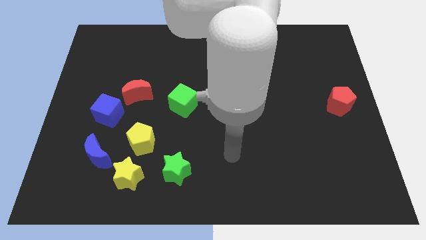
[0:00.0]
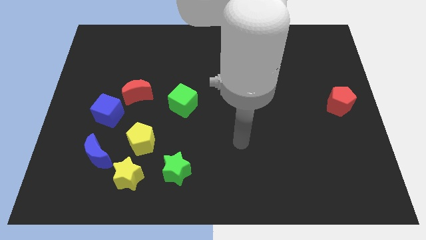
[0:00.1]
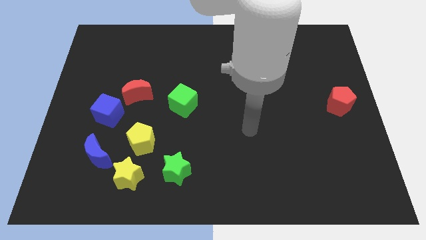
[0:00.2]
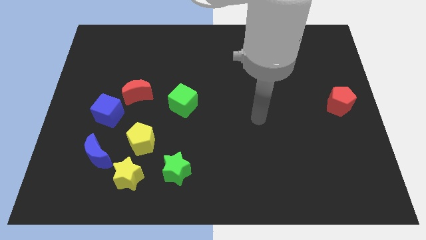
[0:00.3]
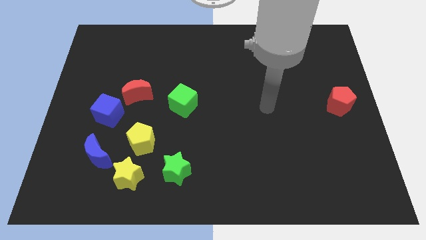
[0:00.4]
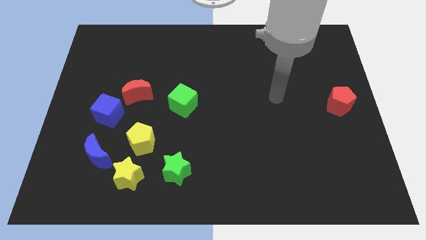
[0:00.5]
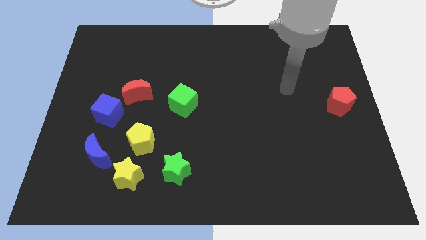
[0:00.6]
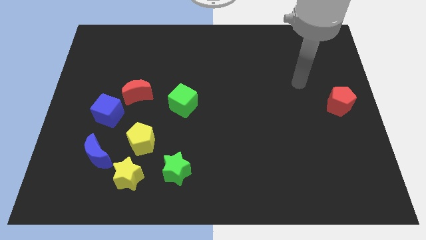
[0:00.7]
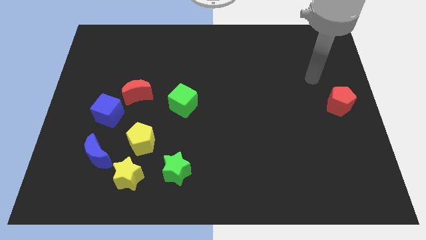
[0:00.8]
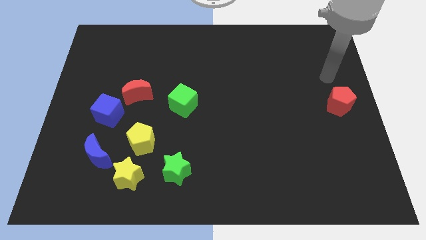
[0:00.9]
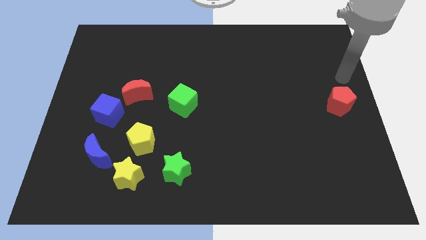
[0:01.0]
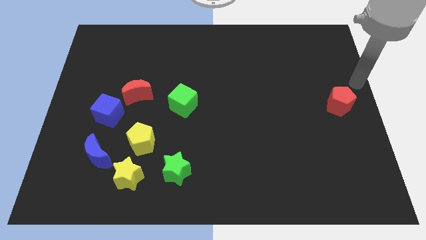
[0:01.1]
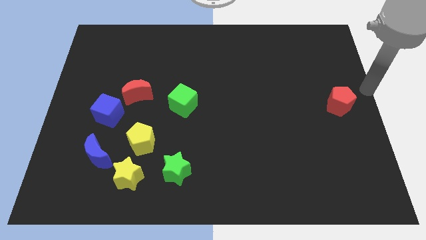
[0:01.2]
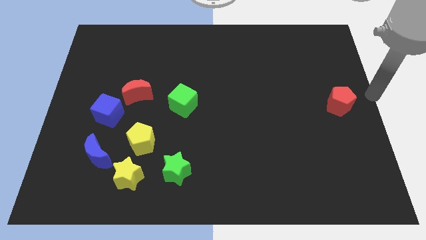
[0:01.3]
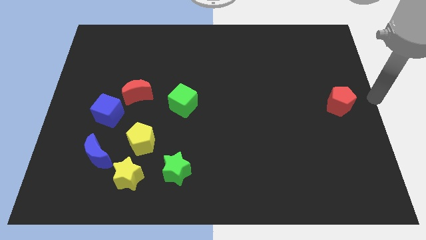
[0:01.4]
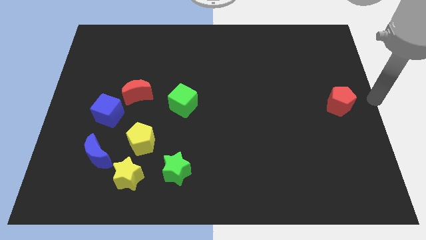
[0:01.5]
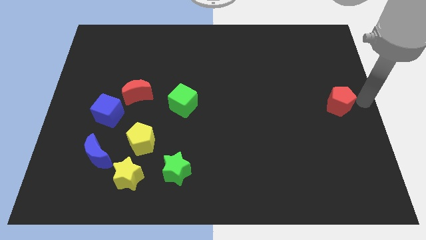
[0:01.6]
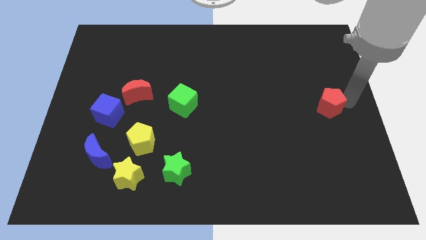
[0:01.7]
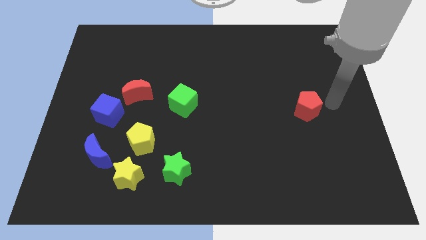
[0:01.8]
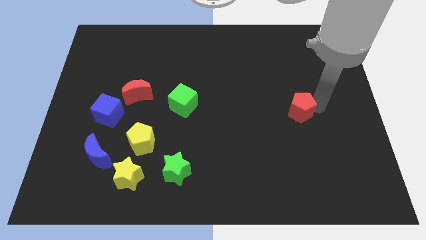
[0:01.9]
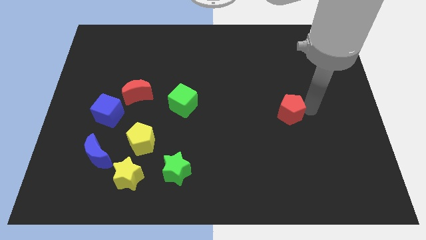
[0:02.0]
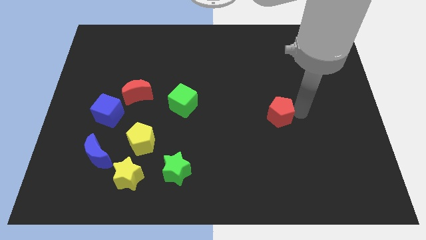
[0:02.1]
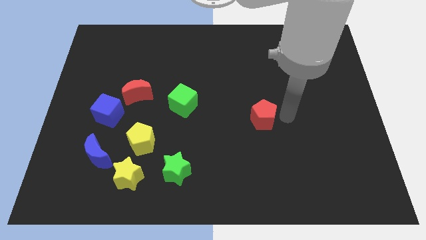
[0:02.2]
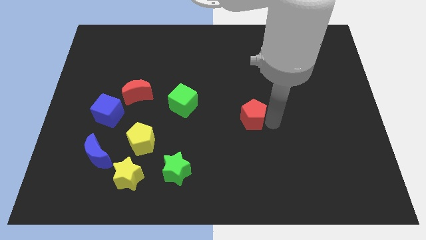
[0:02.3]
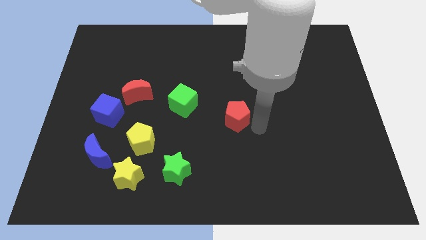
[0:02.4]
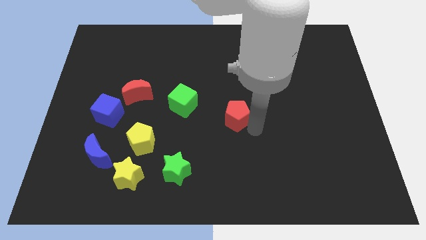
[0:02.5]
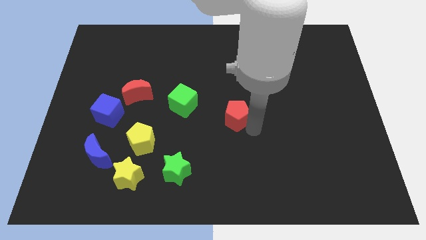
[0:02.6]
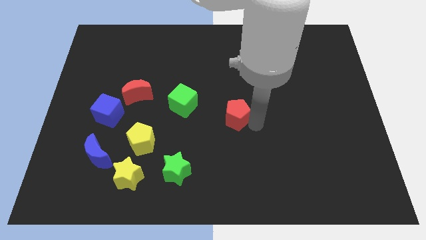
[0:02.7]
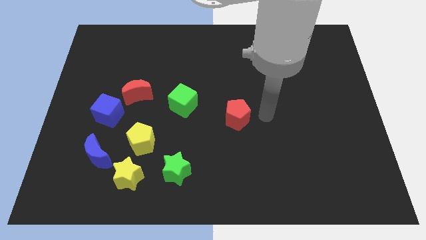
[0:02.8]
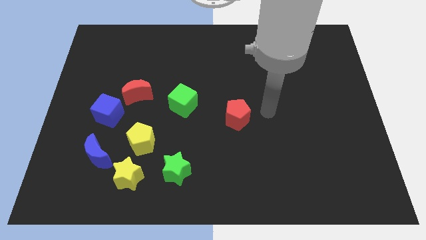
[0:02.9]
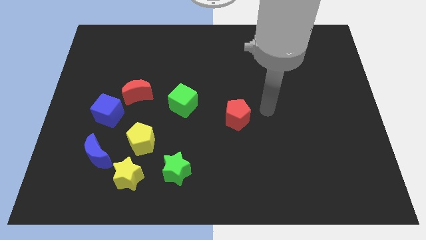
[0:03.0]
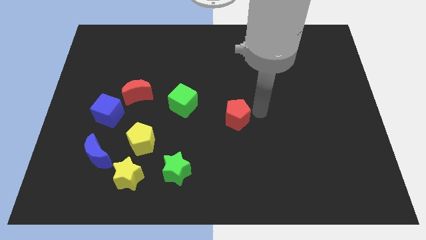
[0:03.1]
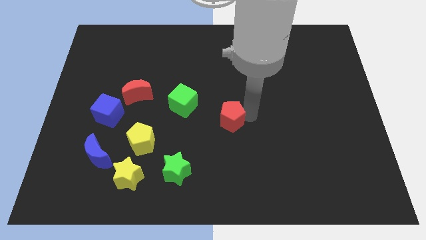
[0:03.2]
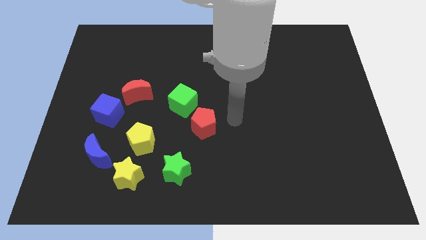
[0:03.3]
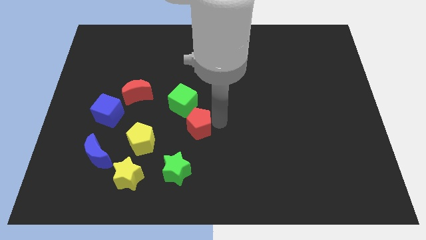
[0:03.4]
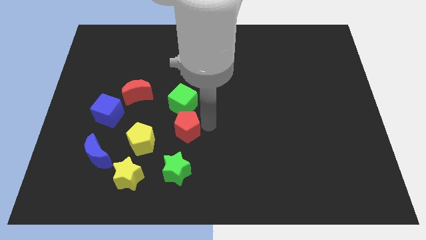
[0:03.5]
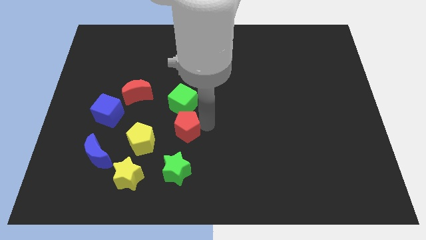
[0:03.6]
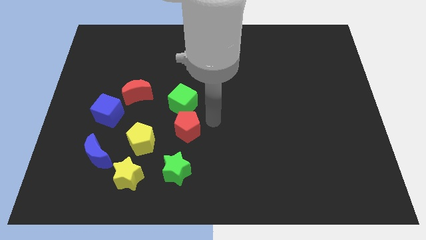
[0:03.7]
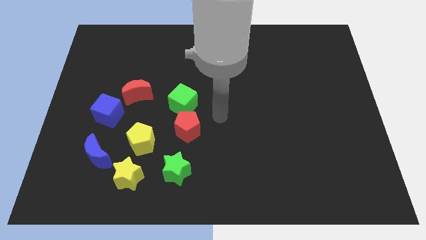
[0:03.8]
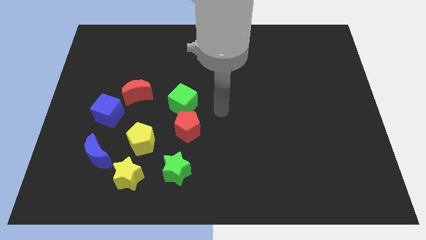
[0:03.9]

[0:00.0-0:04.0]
place the red pentagon below the green cube

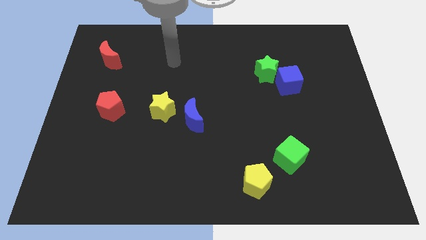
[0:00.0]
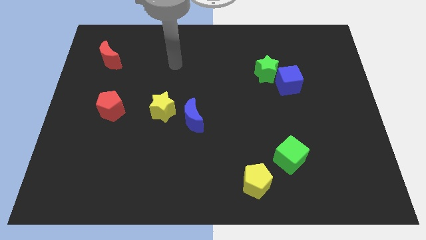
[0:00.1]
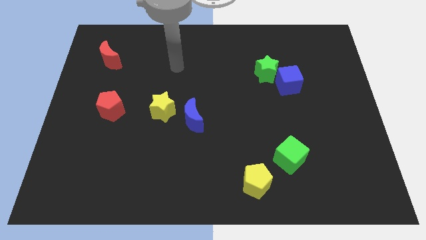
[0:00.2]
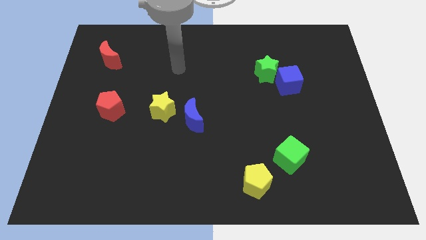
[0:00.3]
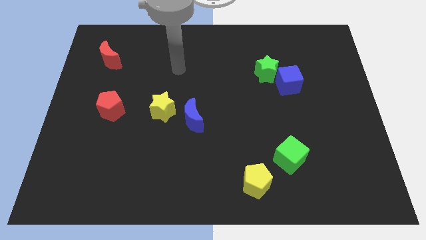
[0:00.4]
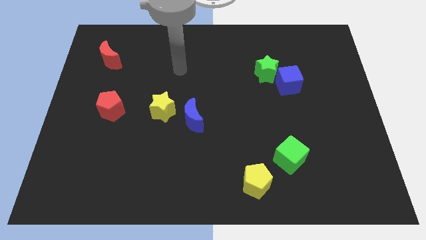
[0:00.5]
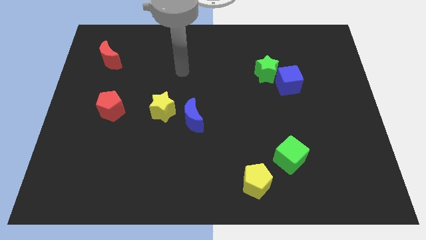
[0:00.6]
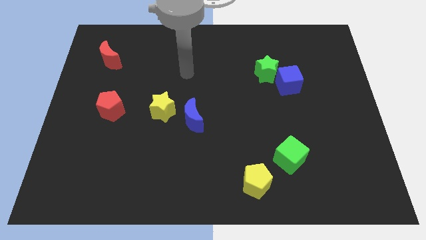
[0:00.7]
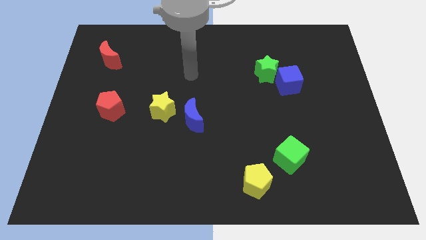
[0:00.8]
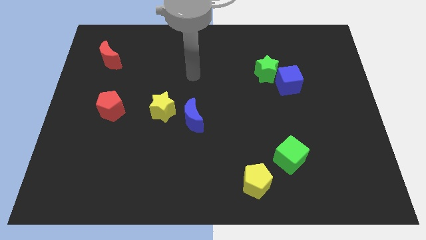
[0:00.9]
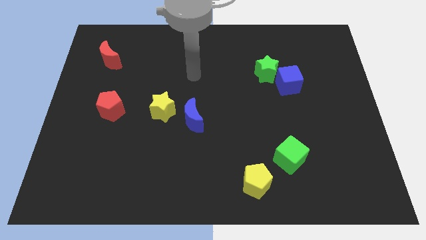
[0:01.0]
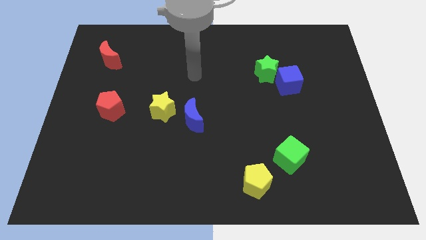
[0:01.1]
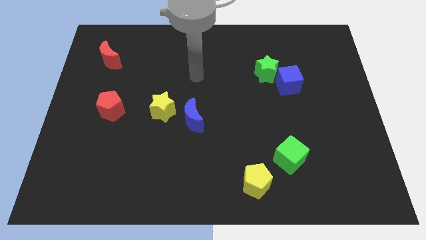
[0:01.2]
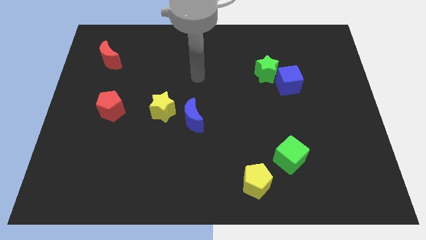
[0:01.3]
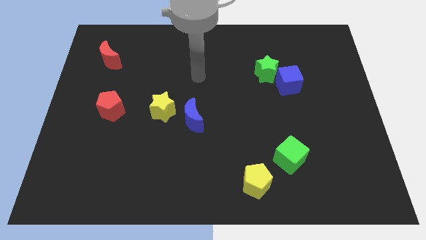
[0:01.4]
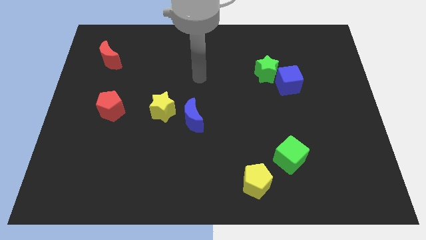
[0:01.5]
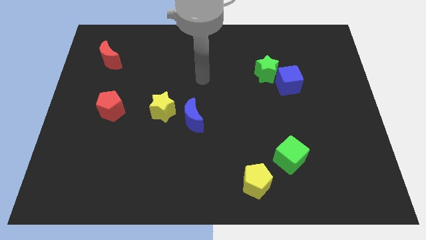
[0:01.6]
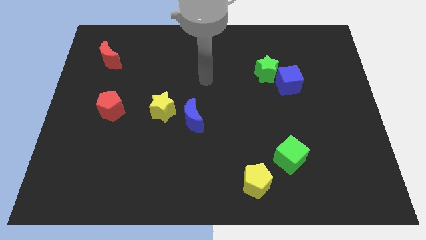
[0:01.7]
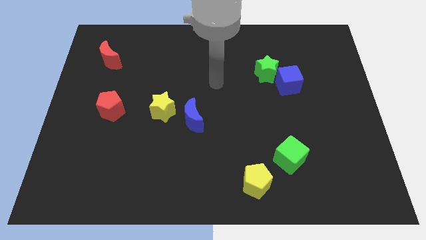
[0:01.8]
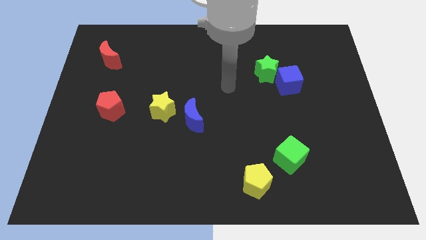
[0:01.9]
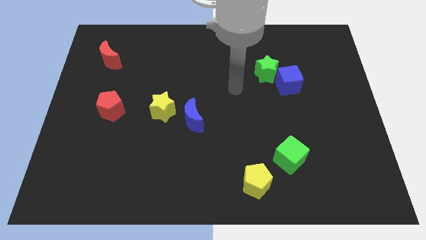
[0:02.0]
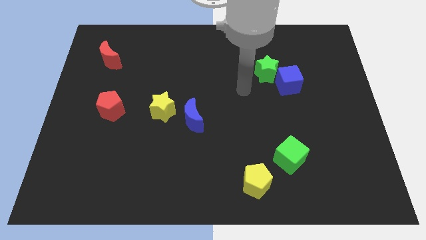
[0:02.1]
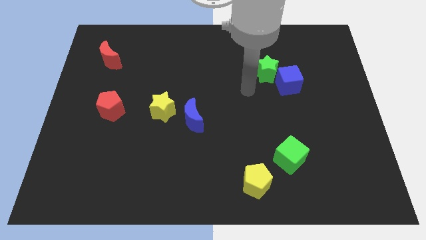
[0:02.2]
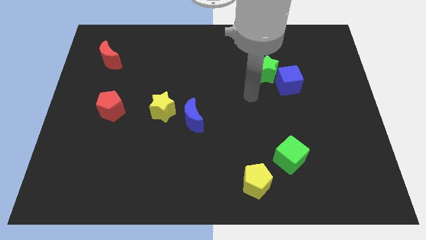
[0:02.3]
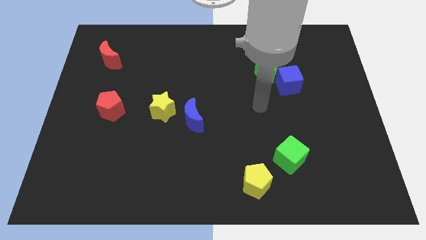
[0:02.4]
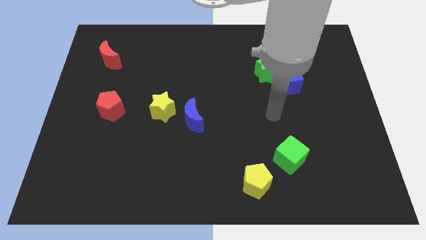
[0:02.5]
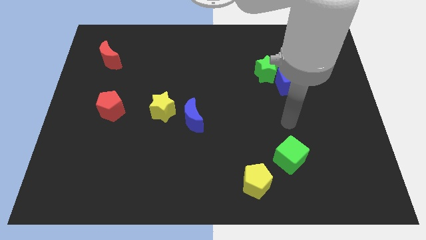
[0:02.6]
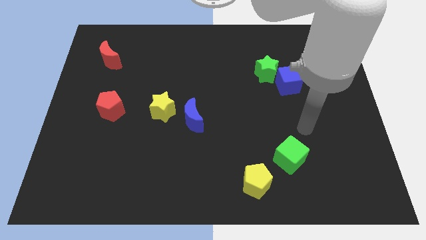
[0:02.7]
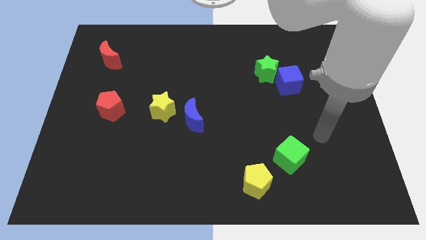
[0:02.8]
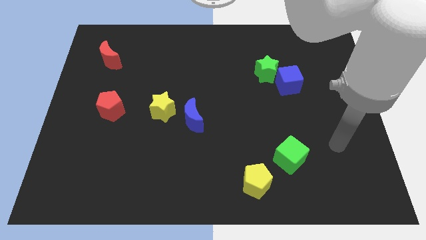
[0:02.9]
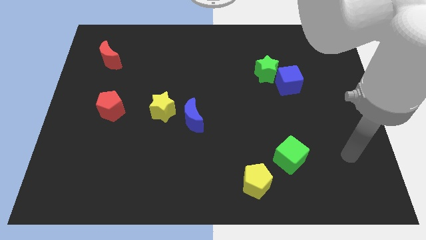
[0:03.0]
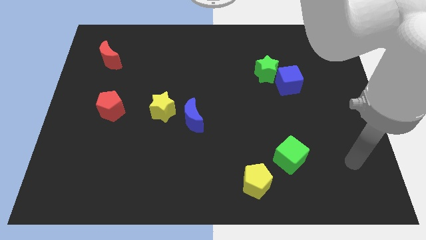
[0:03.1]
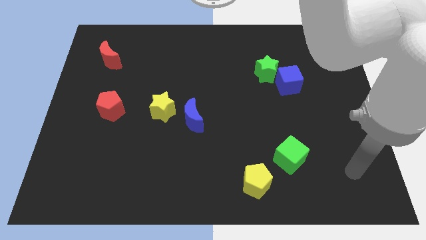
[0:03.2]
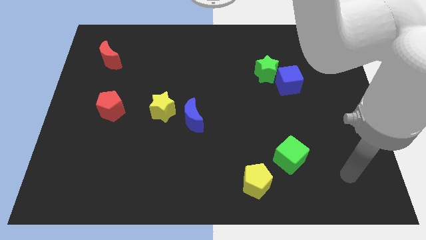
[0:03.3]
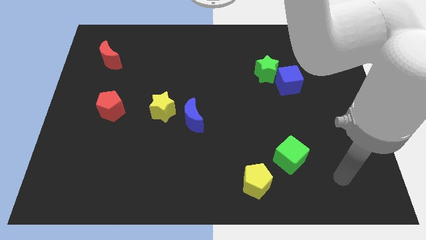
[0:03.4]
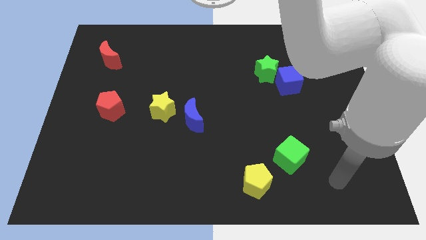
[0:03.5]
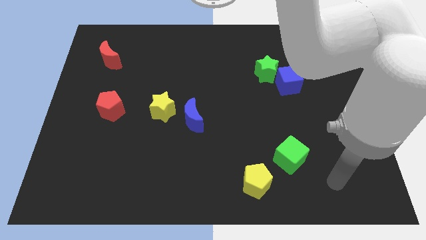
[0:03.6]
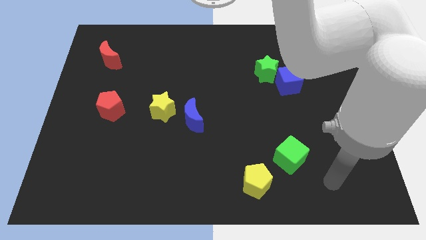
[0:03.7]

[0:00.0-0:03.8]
move the arm to the bottom right

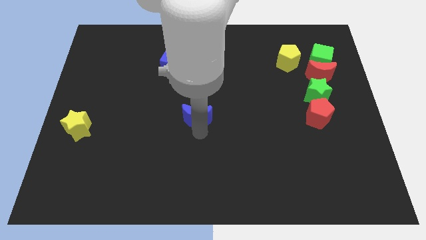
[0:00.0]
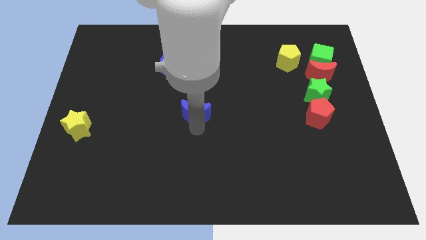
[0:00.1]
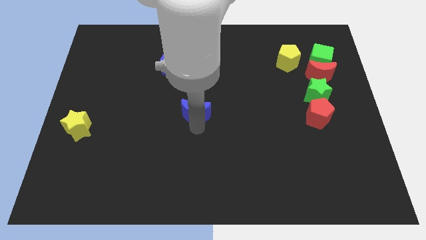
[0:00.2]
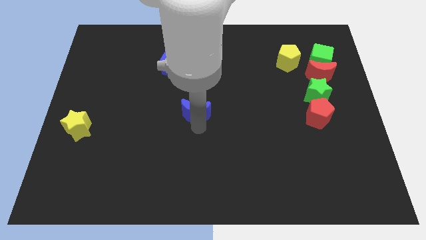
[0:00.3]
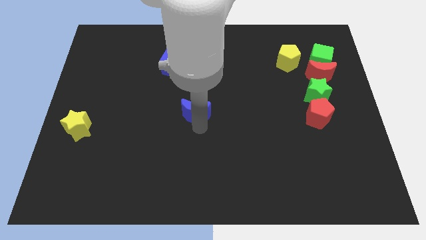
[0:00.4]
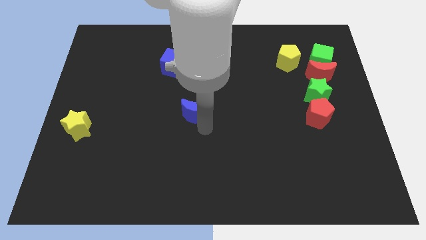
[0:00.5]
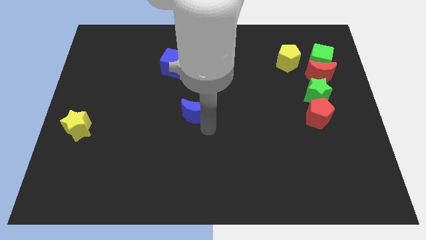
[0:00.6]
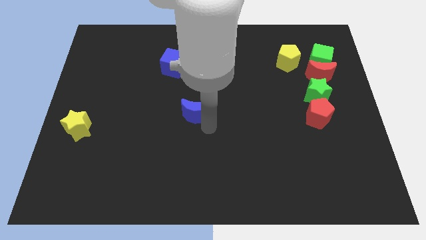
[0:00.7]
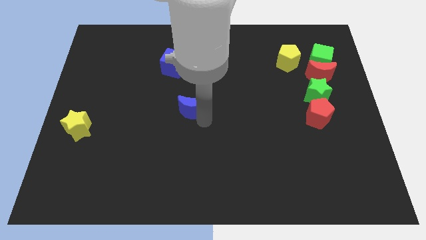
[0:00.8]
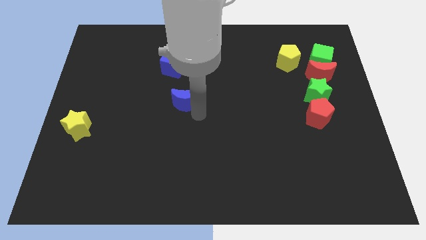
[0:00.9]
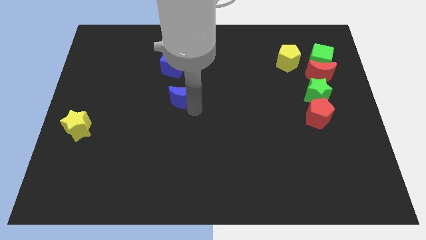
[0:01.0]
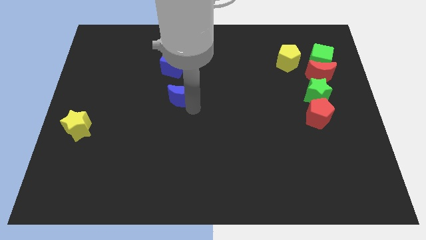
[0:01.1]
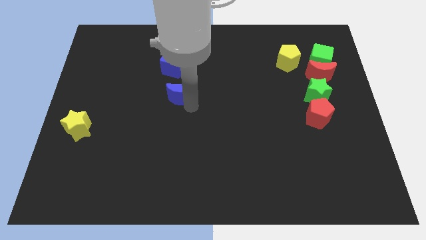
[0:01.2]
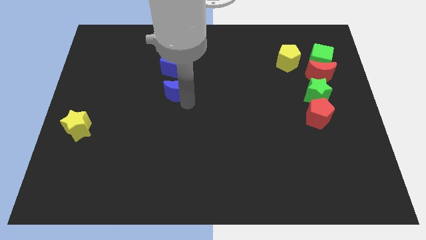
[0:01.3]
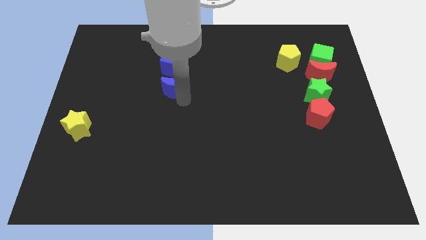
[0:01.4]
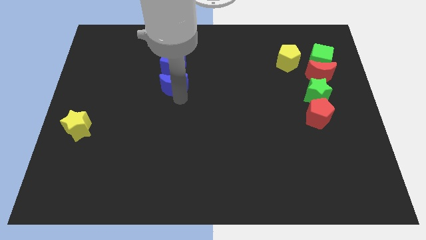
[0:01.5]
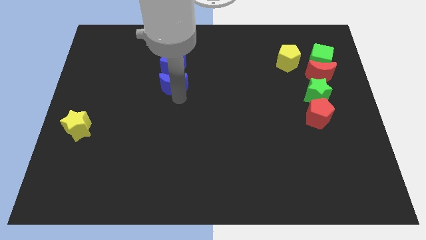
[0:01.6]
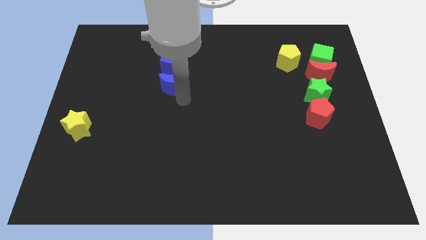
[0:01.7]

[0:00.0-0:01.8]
move the blue crescent towards the blue cube
